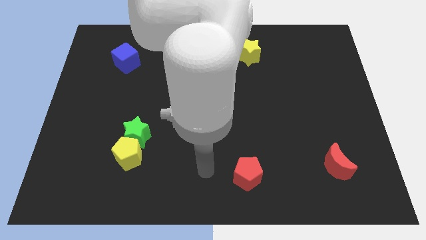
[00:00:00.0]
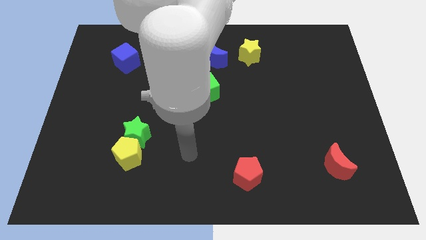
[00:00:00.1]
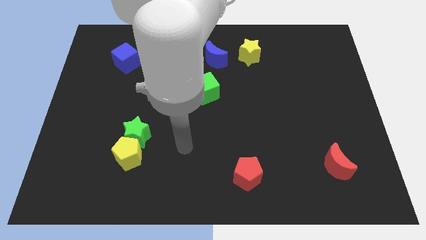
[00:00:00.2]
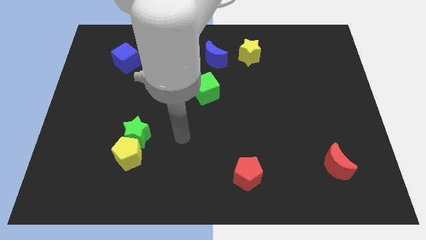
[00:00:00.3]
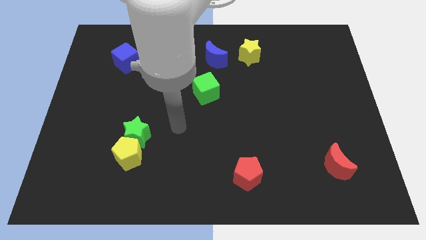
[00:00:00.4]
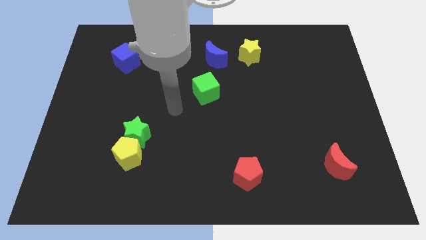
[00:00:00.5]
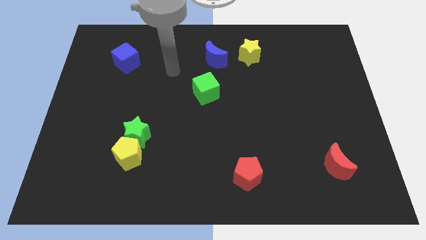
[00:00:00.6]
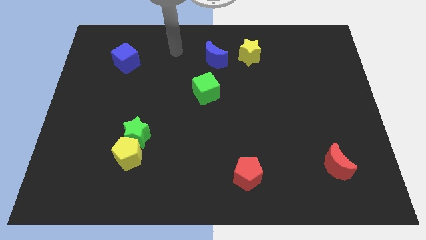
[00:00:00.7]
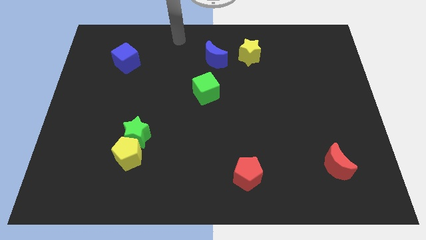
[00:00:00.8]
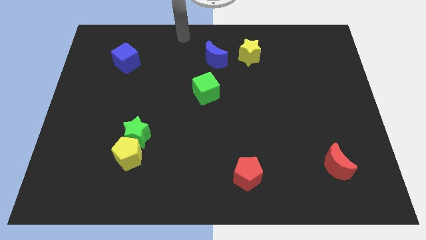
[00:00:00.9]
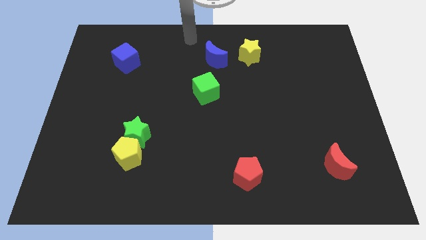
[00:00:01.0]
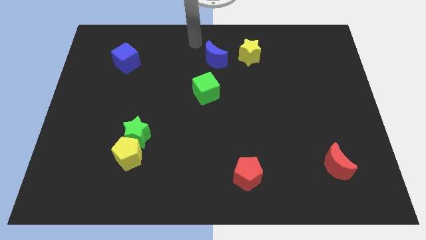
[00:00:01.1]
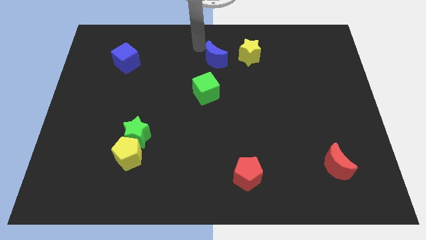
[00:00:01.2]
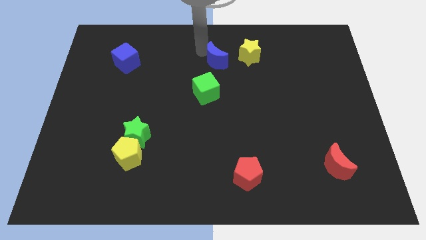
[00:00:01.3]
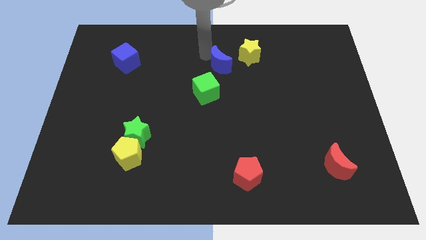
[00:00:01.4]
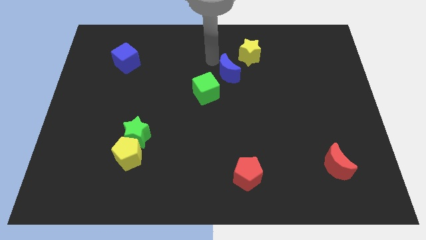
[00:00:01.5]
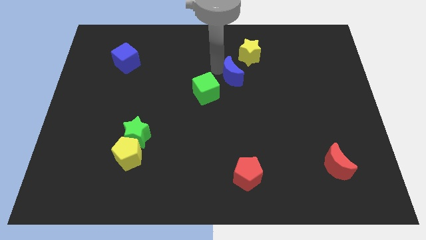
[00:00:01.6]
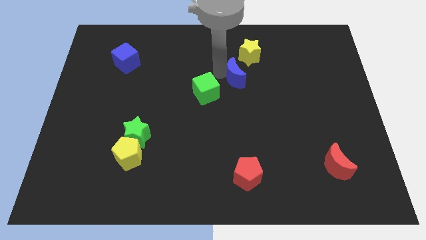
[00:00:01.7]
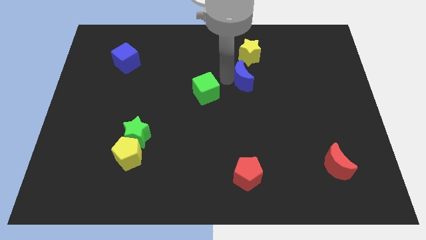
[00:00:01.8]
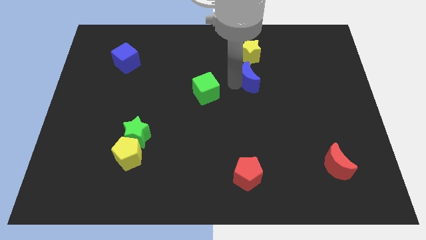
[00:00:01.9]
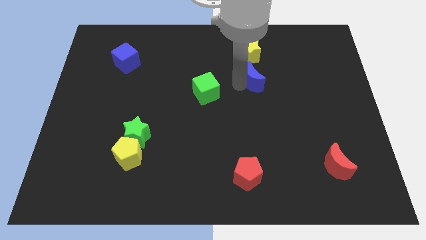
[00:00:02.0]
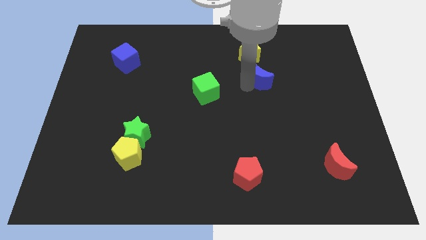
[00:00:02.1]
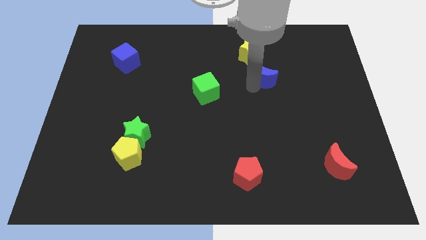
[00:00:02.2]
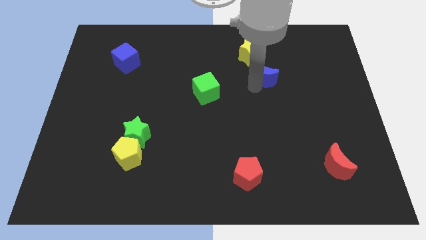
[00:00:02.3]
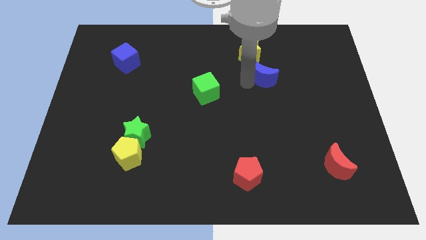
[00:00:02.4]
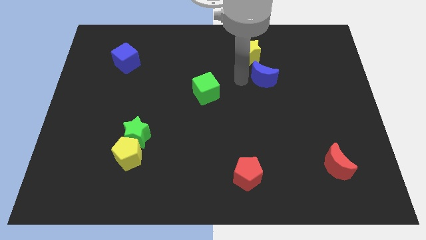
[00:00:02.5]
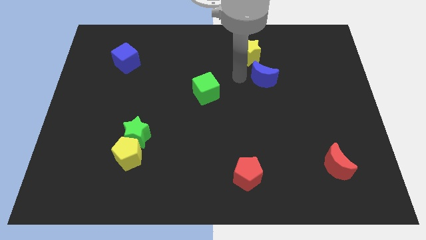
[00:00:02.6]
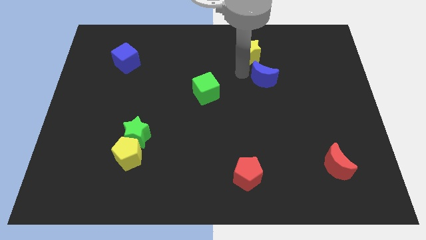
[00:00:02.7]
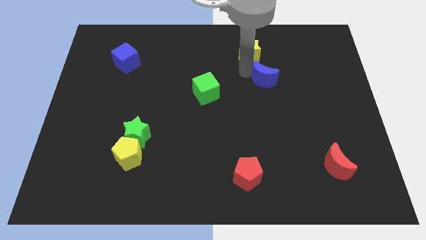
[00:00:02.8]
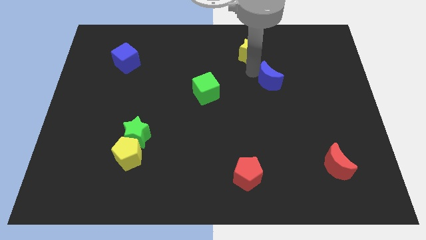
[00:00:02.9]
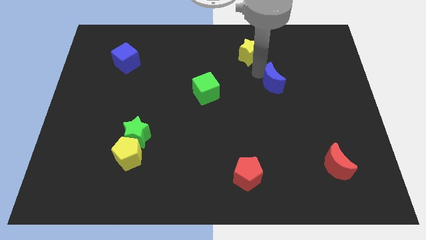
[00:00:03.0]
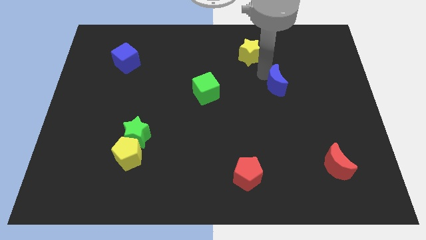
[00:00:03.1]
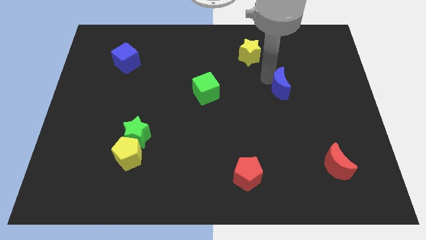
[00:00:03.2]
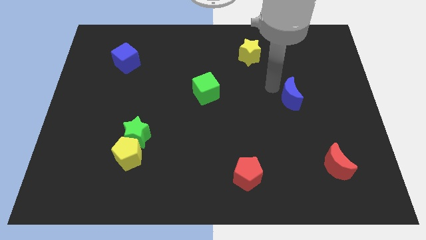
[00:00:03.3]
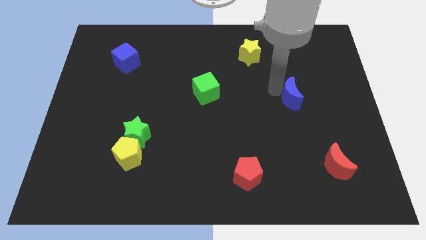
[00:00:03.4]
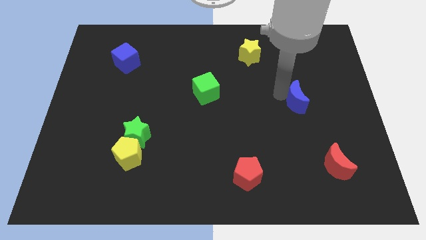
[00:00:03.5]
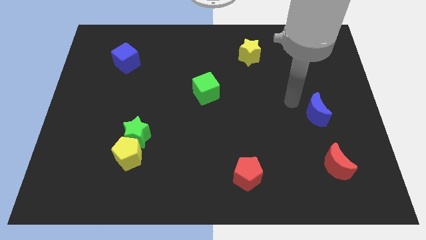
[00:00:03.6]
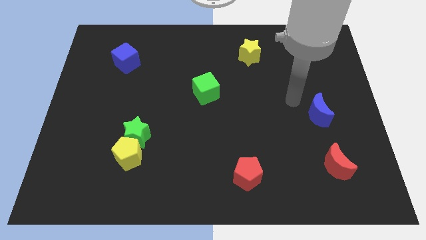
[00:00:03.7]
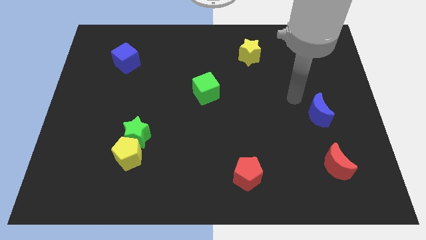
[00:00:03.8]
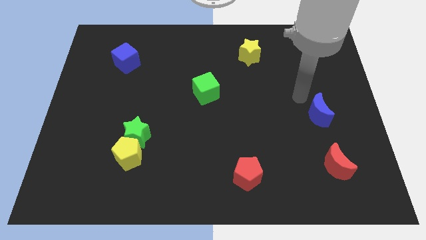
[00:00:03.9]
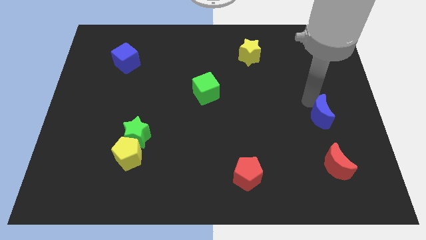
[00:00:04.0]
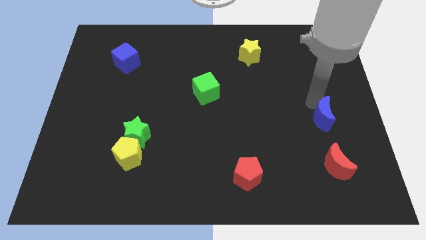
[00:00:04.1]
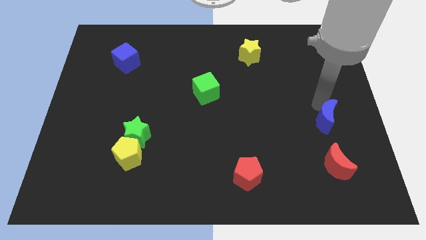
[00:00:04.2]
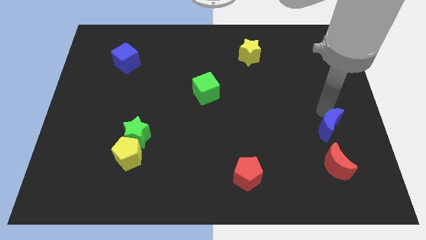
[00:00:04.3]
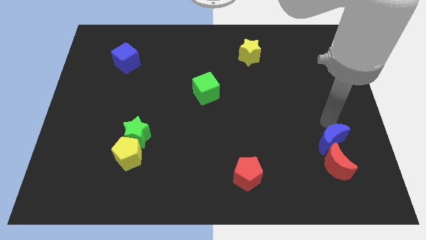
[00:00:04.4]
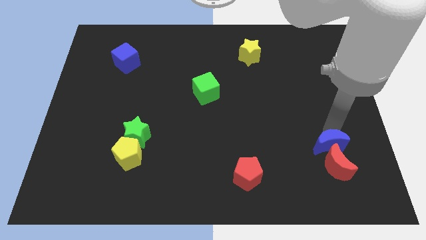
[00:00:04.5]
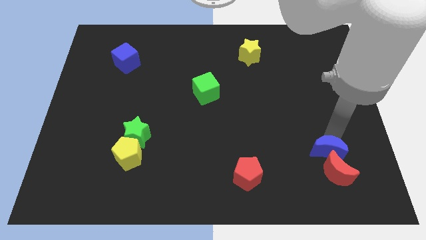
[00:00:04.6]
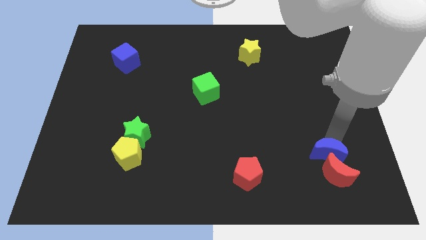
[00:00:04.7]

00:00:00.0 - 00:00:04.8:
move the blue moon to the red moon

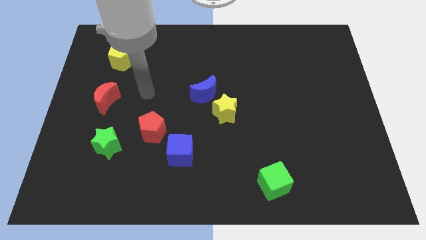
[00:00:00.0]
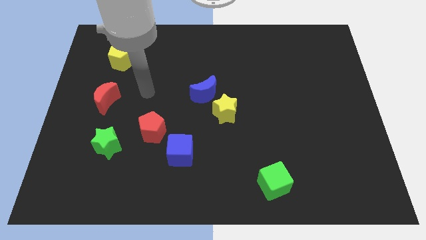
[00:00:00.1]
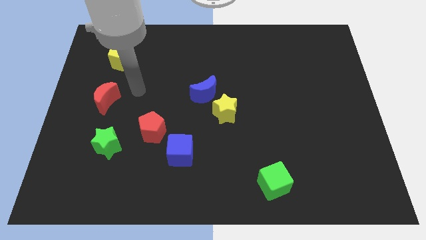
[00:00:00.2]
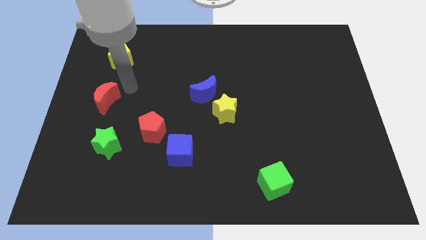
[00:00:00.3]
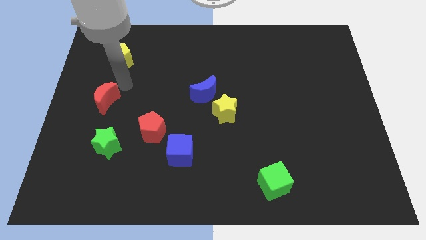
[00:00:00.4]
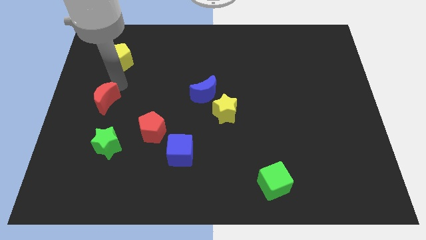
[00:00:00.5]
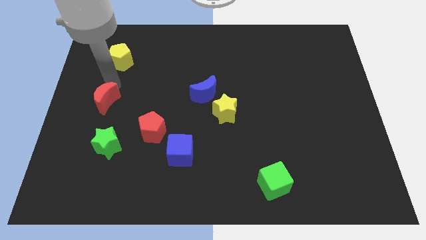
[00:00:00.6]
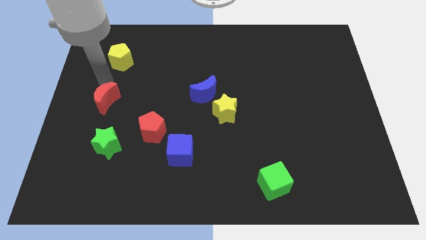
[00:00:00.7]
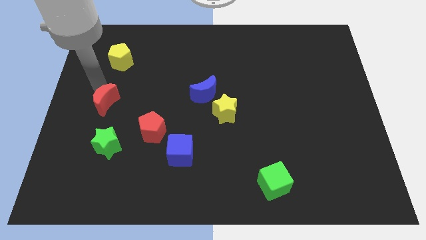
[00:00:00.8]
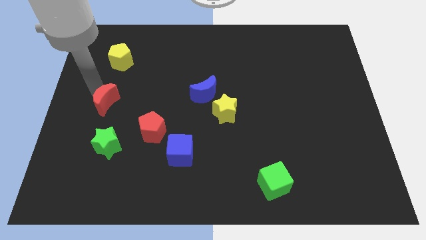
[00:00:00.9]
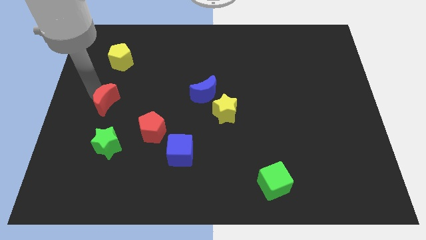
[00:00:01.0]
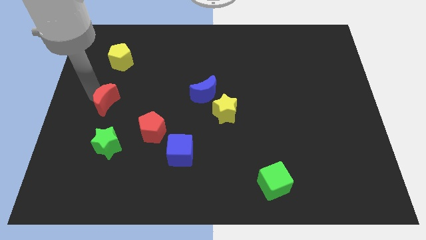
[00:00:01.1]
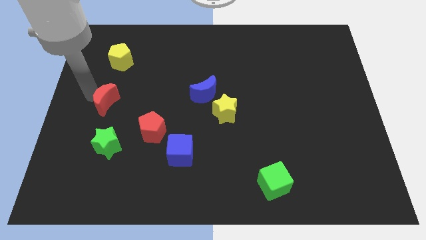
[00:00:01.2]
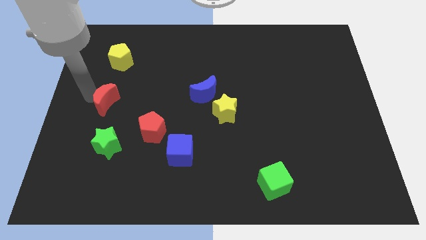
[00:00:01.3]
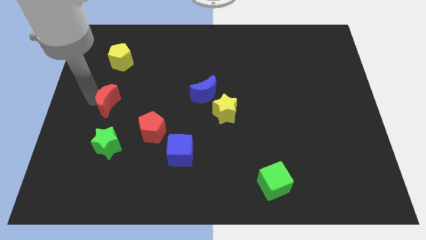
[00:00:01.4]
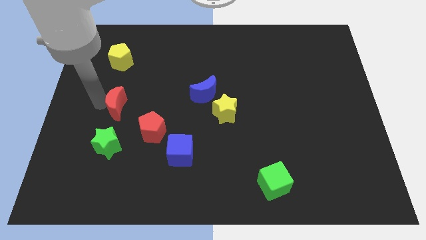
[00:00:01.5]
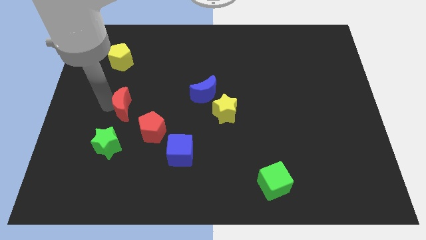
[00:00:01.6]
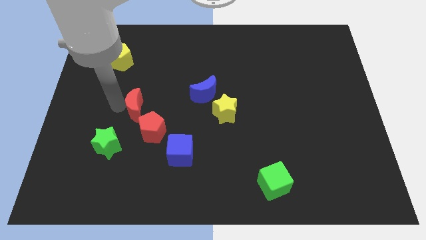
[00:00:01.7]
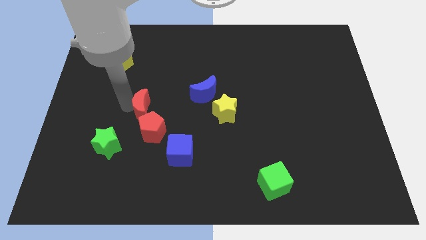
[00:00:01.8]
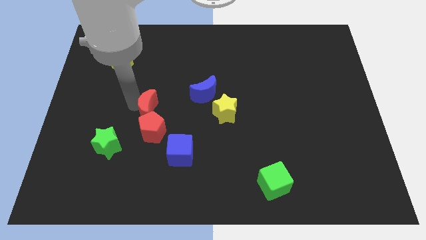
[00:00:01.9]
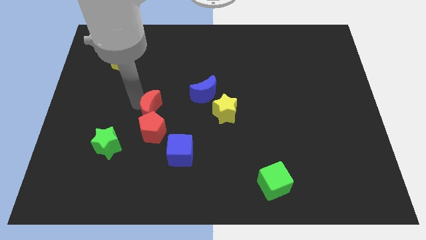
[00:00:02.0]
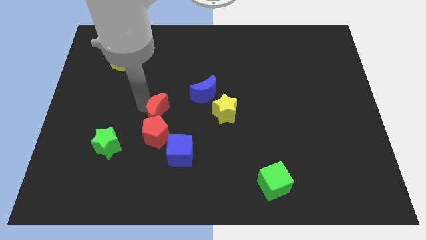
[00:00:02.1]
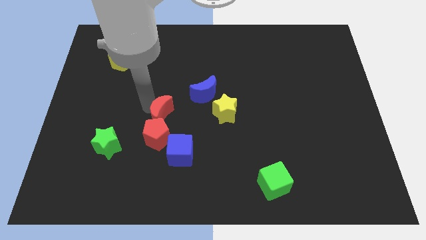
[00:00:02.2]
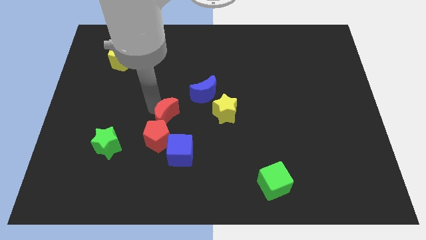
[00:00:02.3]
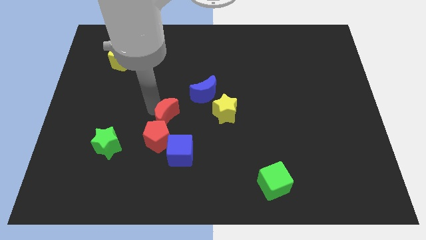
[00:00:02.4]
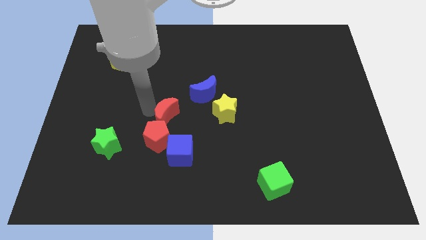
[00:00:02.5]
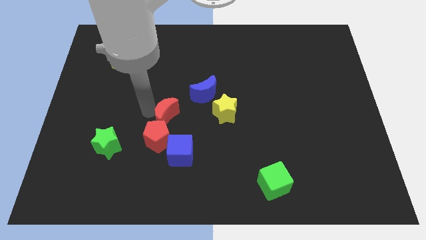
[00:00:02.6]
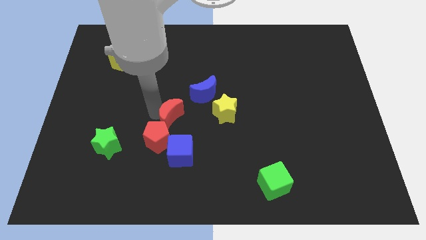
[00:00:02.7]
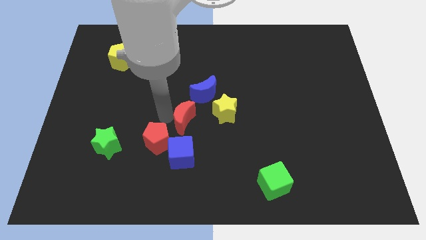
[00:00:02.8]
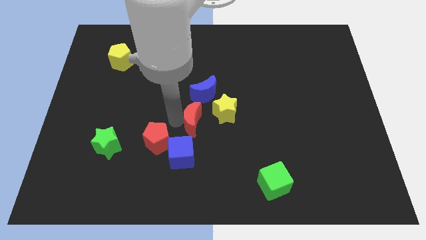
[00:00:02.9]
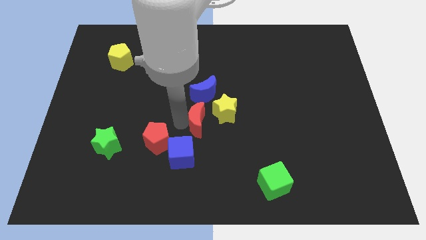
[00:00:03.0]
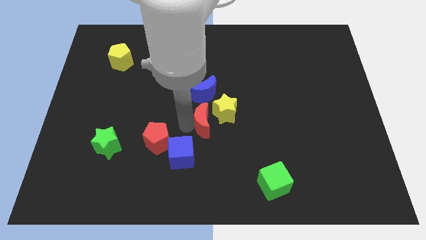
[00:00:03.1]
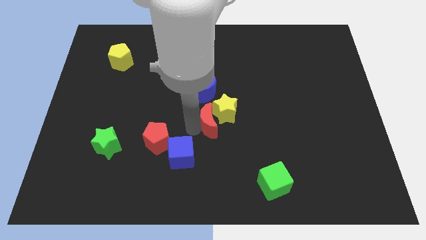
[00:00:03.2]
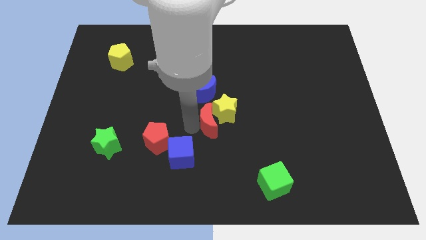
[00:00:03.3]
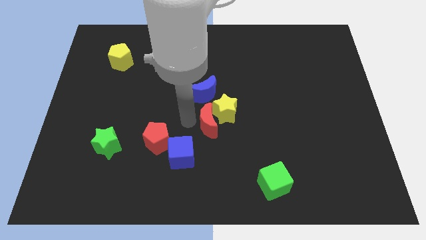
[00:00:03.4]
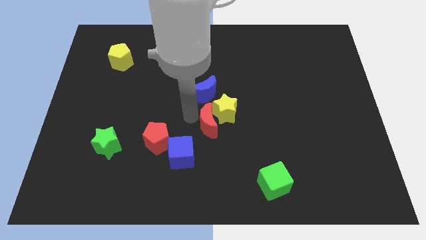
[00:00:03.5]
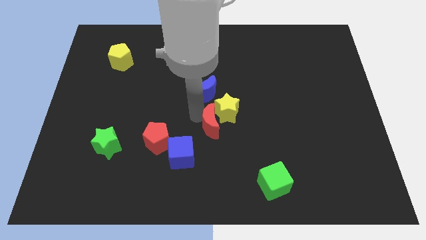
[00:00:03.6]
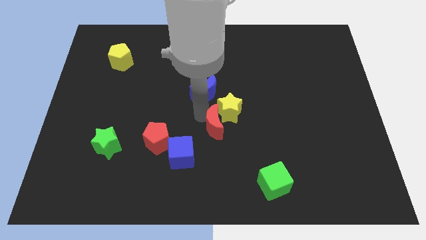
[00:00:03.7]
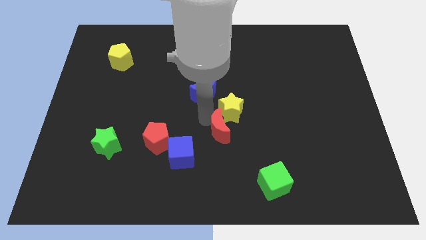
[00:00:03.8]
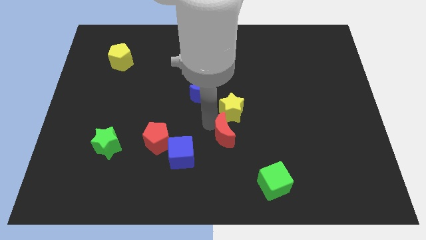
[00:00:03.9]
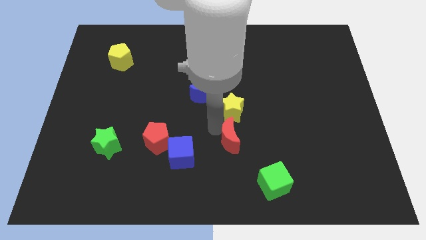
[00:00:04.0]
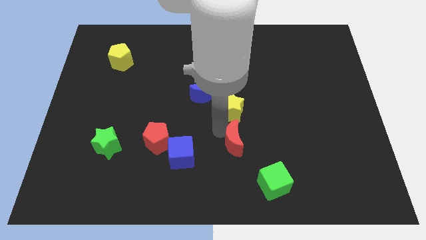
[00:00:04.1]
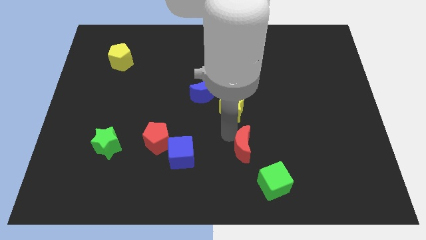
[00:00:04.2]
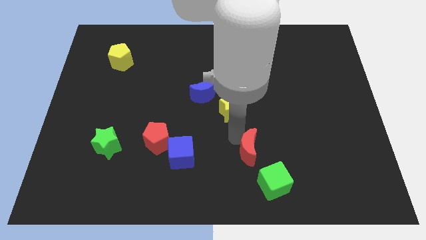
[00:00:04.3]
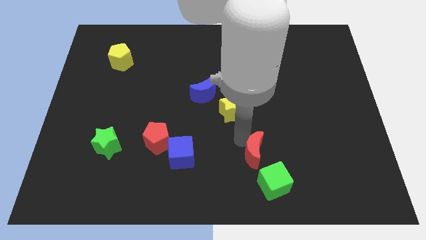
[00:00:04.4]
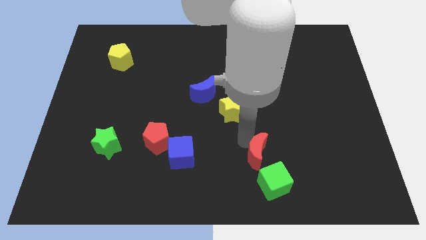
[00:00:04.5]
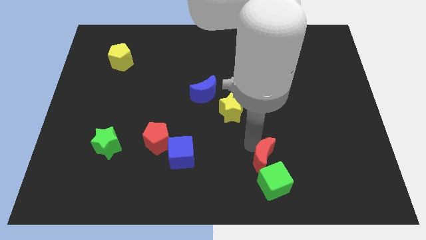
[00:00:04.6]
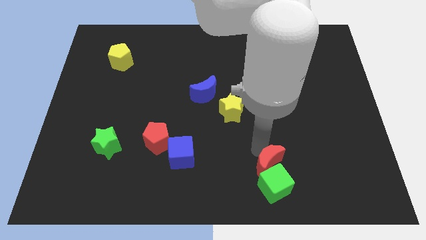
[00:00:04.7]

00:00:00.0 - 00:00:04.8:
slide the red moon towards the green cube
